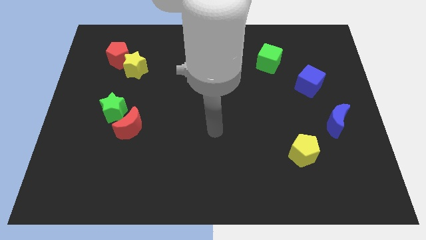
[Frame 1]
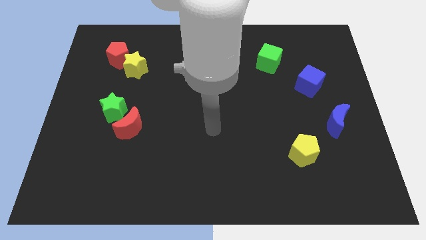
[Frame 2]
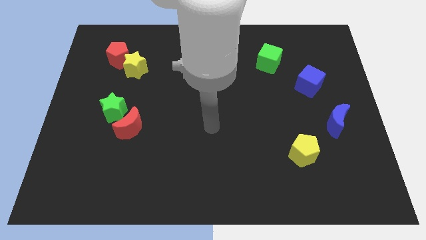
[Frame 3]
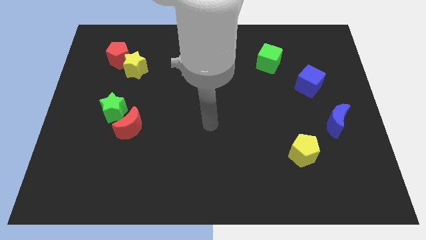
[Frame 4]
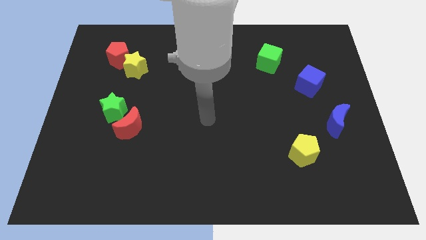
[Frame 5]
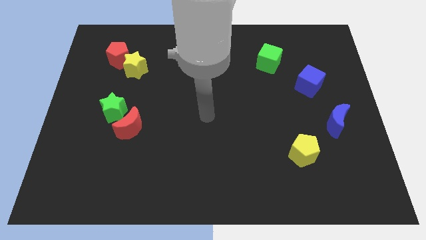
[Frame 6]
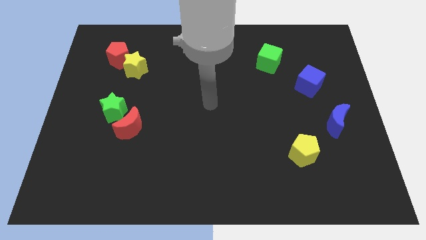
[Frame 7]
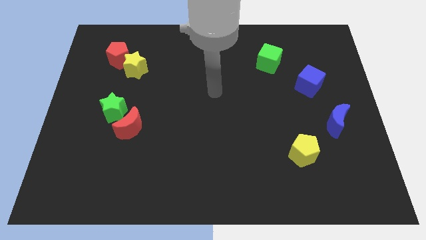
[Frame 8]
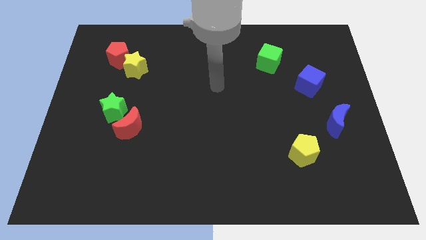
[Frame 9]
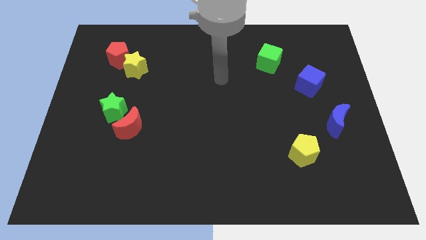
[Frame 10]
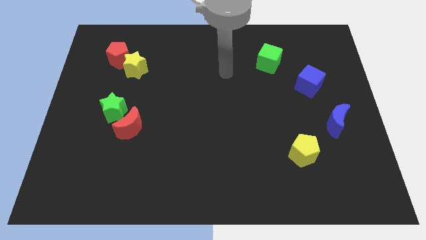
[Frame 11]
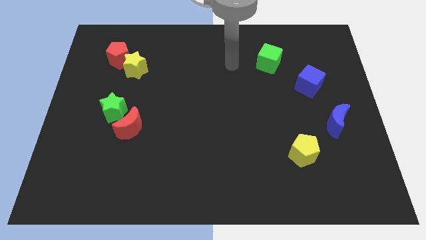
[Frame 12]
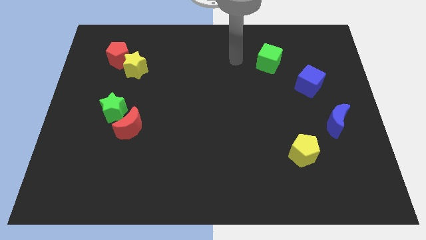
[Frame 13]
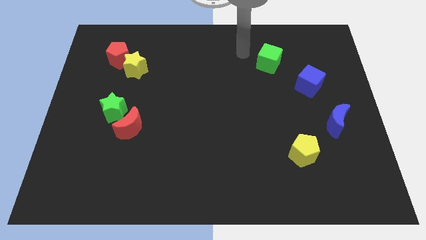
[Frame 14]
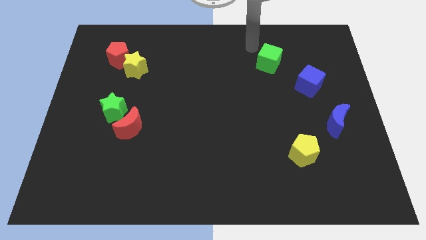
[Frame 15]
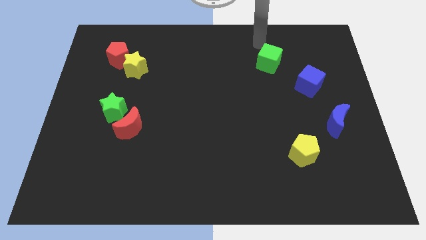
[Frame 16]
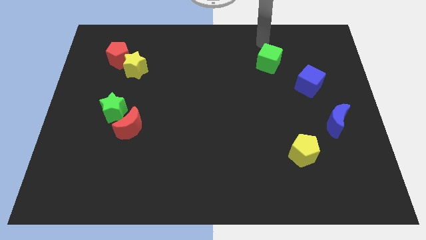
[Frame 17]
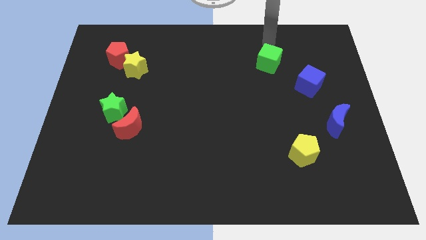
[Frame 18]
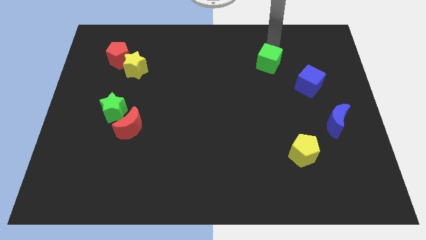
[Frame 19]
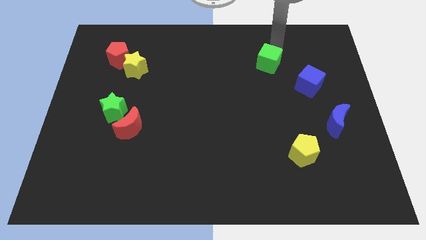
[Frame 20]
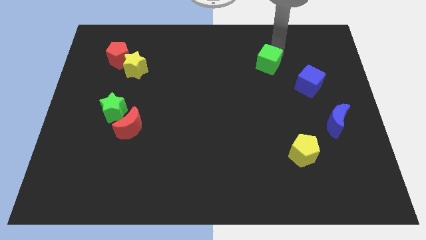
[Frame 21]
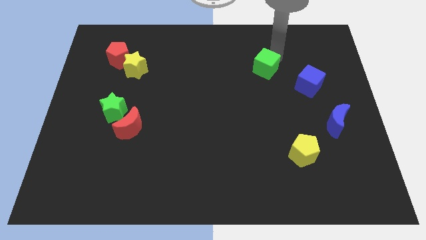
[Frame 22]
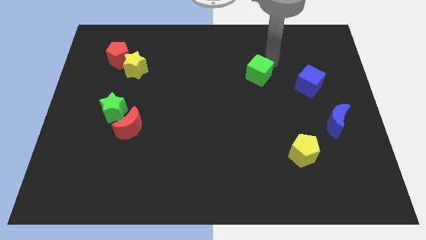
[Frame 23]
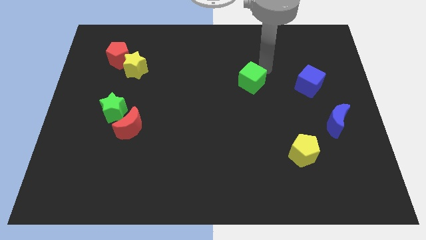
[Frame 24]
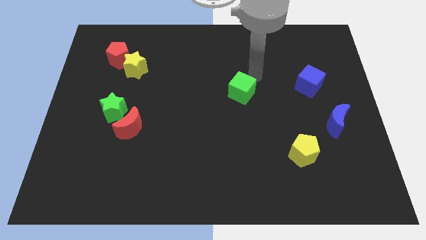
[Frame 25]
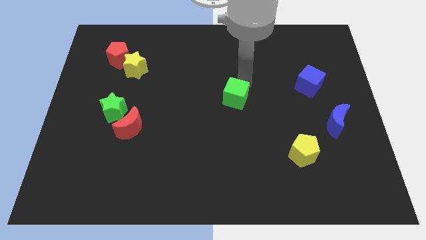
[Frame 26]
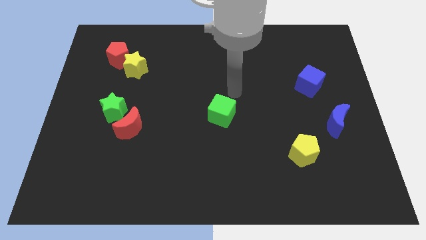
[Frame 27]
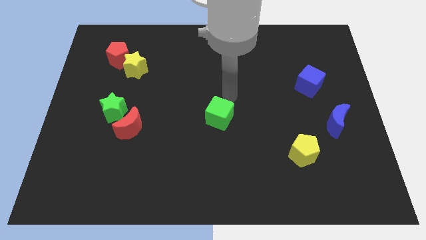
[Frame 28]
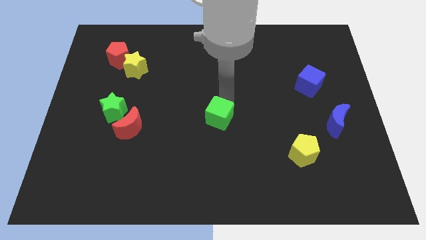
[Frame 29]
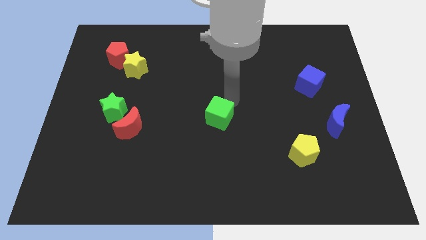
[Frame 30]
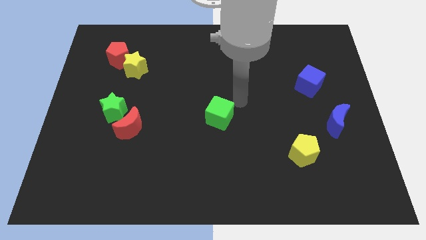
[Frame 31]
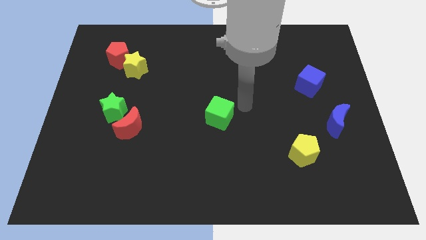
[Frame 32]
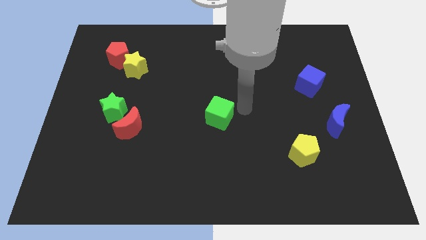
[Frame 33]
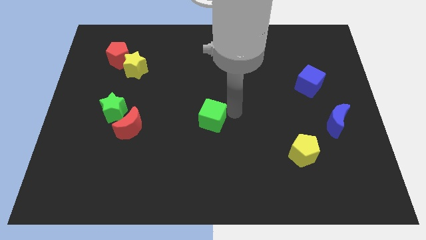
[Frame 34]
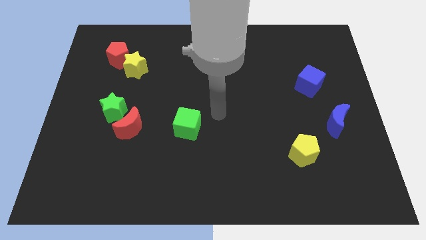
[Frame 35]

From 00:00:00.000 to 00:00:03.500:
move the green cube to the center of the board

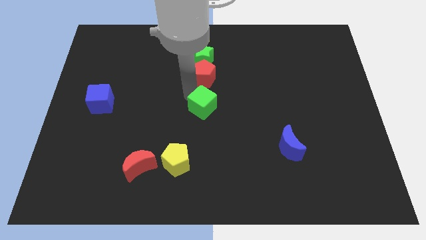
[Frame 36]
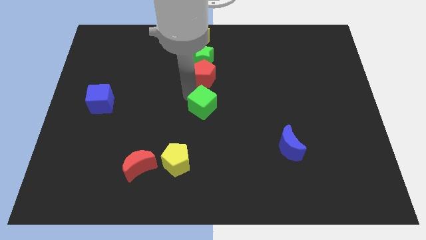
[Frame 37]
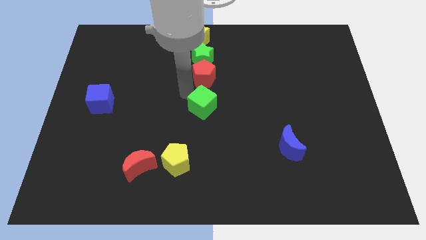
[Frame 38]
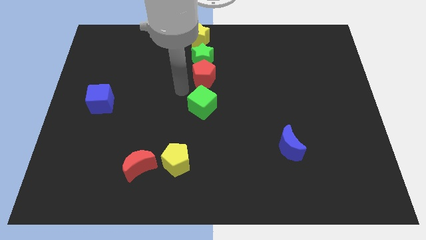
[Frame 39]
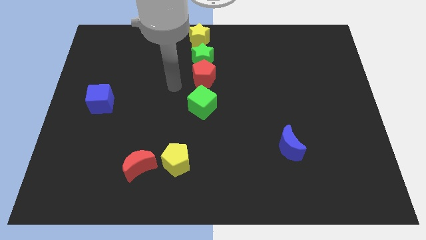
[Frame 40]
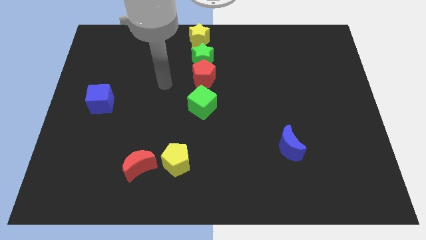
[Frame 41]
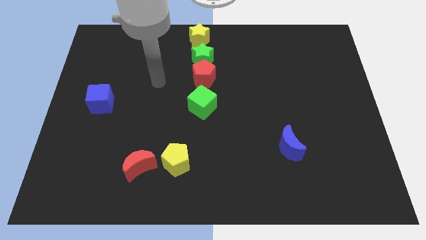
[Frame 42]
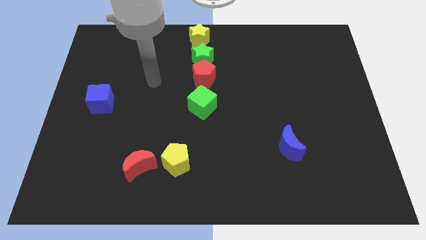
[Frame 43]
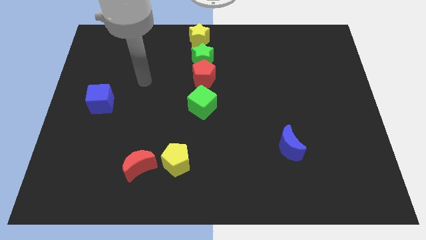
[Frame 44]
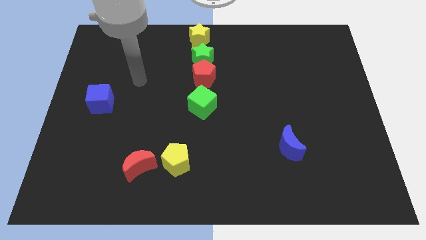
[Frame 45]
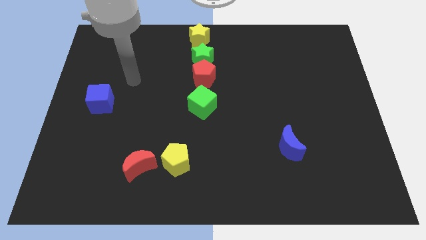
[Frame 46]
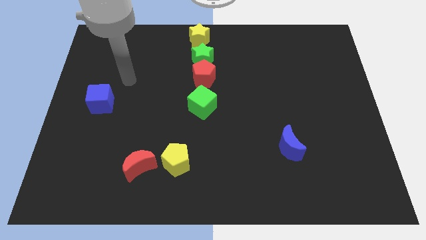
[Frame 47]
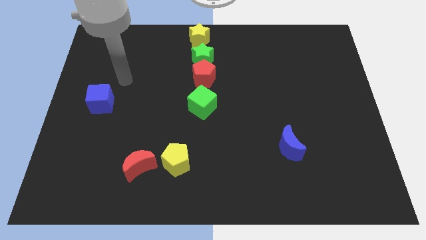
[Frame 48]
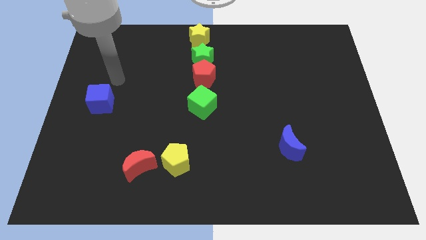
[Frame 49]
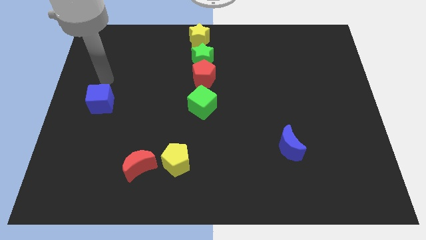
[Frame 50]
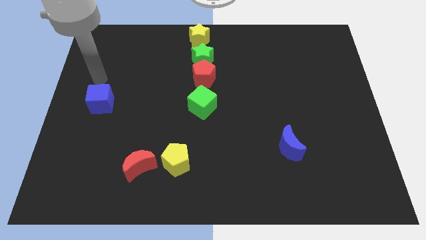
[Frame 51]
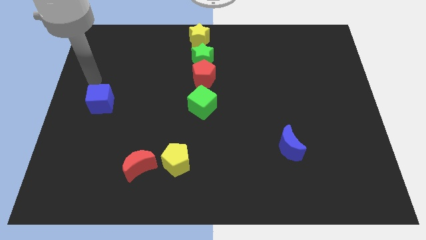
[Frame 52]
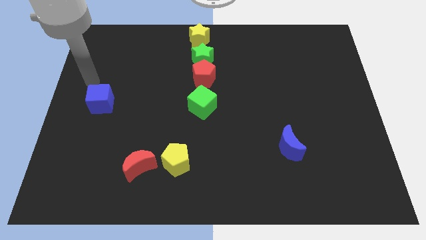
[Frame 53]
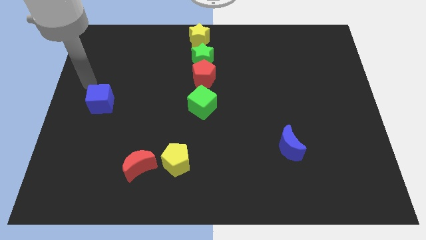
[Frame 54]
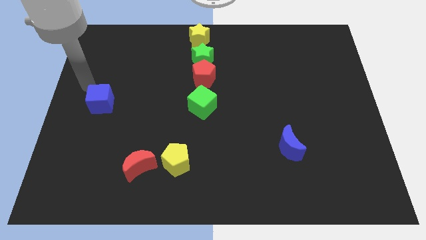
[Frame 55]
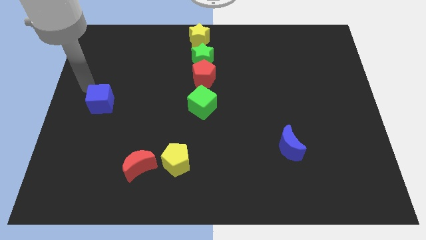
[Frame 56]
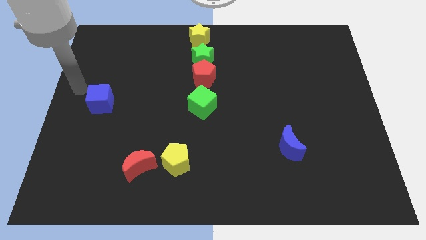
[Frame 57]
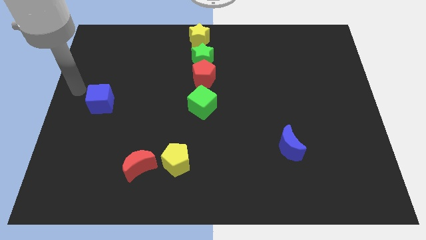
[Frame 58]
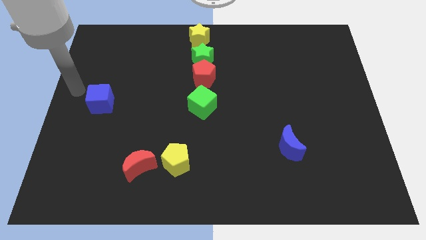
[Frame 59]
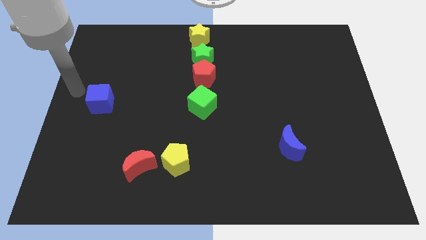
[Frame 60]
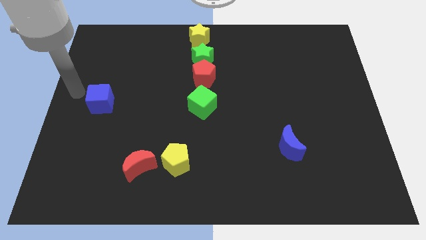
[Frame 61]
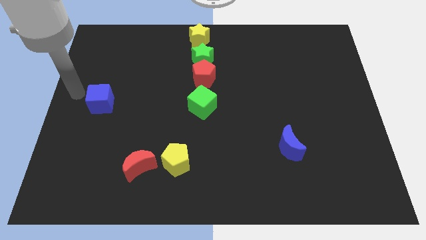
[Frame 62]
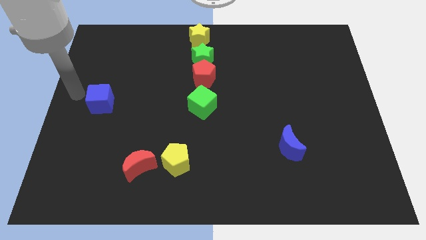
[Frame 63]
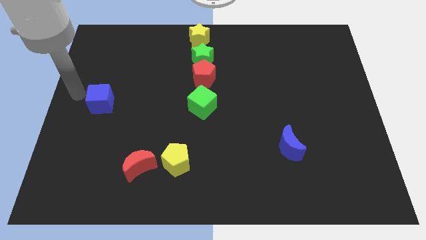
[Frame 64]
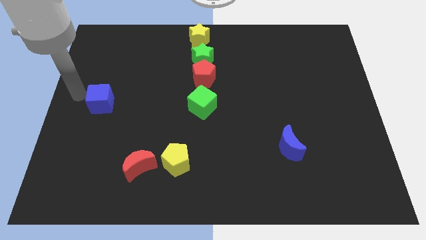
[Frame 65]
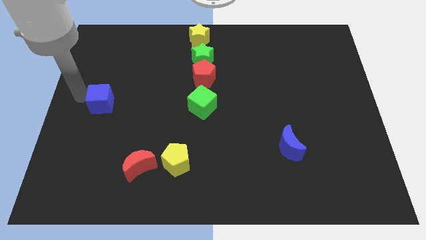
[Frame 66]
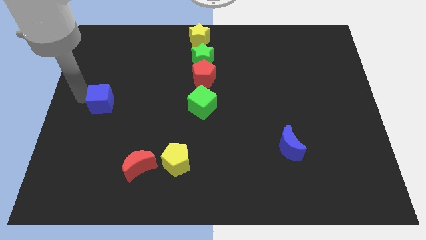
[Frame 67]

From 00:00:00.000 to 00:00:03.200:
move your arm away from the green cube

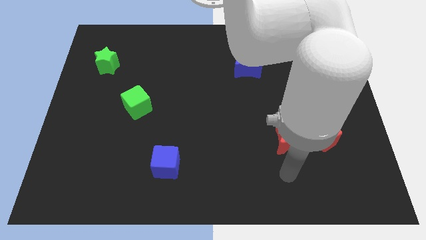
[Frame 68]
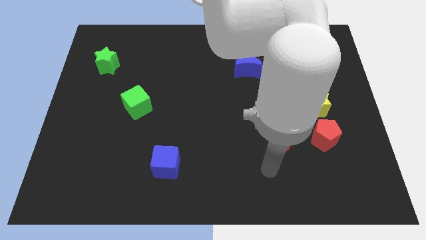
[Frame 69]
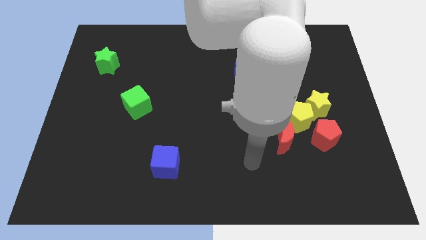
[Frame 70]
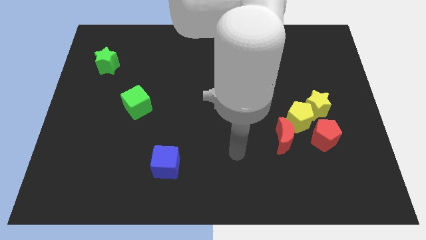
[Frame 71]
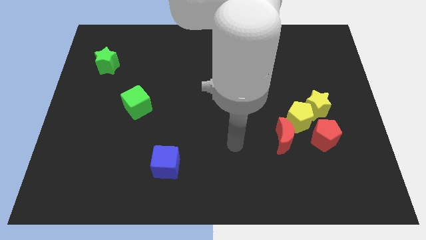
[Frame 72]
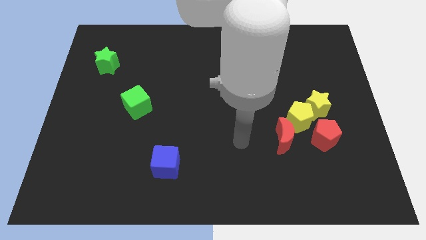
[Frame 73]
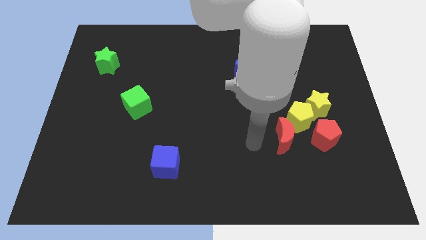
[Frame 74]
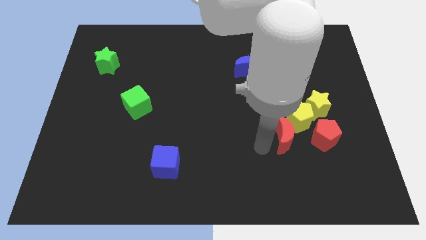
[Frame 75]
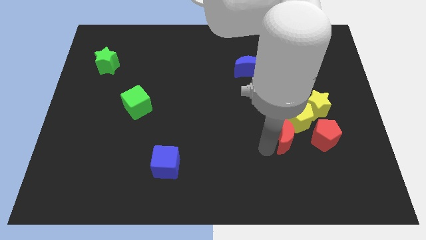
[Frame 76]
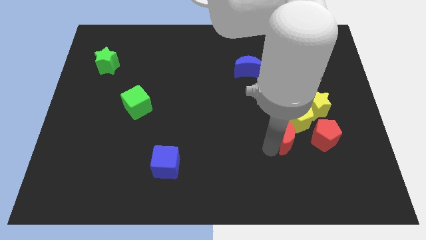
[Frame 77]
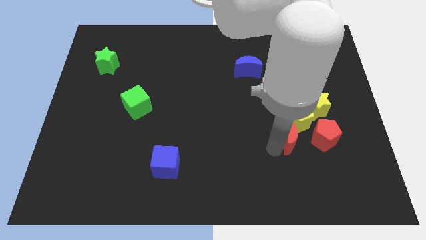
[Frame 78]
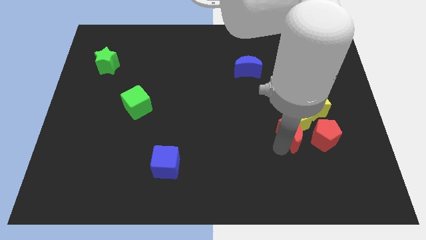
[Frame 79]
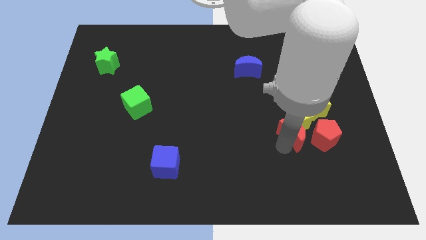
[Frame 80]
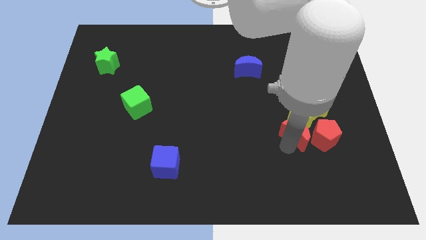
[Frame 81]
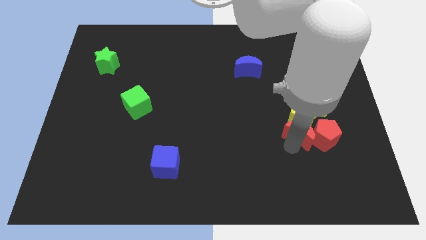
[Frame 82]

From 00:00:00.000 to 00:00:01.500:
slide the red moon into the yellow pentagon

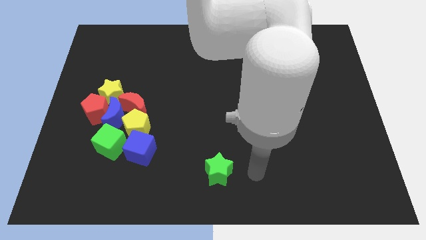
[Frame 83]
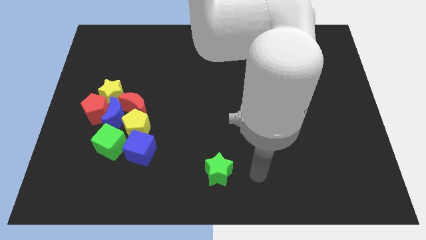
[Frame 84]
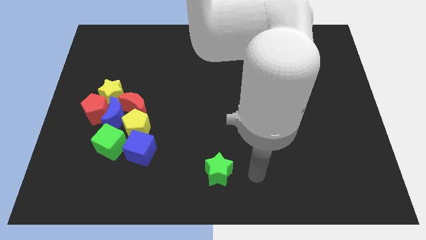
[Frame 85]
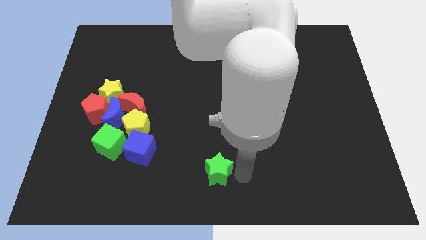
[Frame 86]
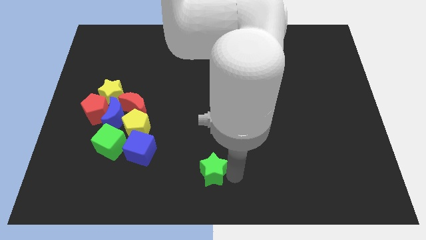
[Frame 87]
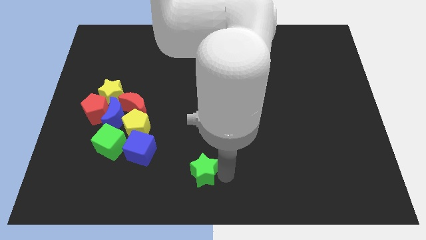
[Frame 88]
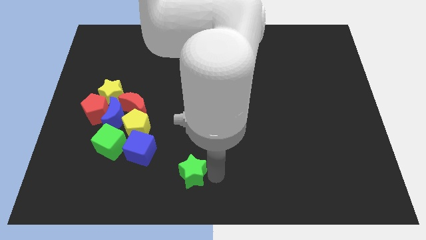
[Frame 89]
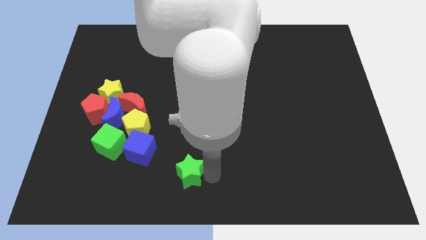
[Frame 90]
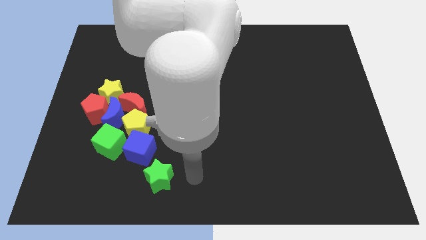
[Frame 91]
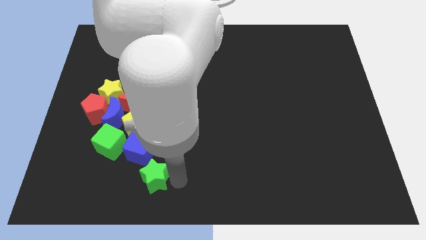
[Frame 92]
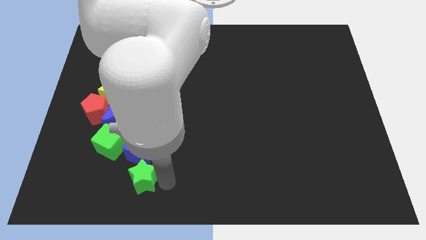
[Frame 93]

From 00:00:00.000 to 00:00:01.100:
move the gree star under the blue cube
